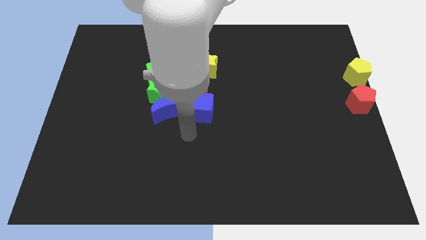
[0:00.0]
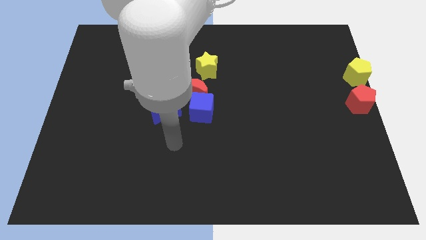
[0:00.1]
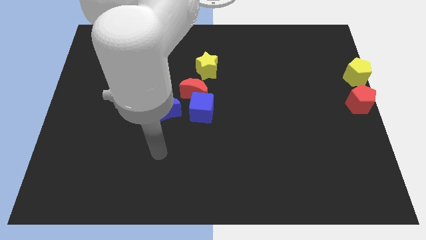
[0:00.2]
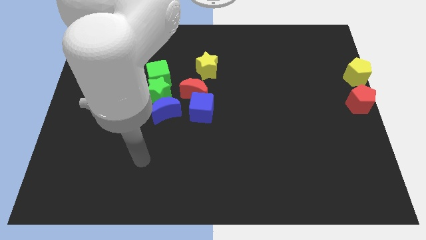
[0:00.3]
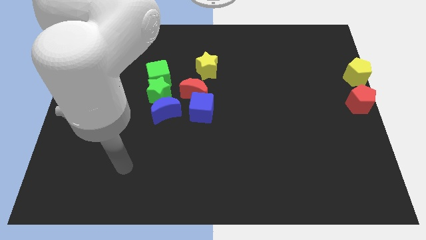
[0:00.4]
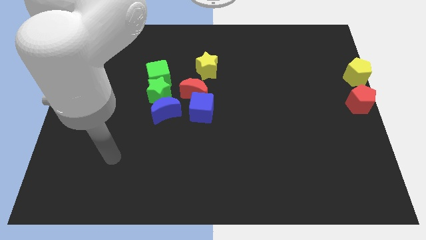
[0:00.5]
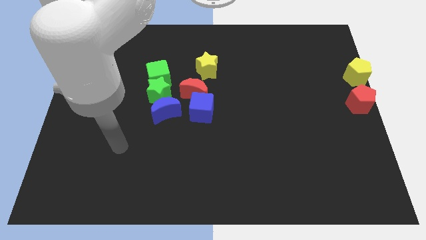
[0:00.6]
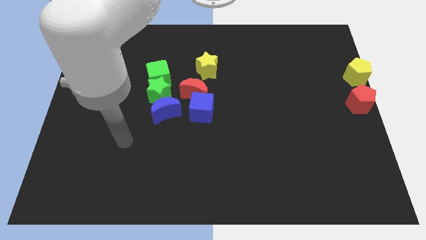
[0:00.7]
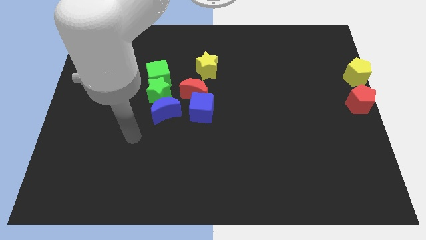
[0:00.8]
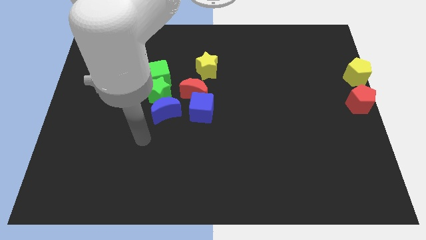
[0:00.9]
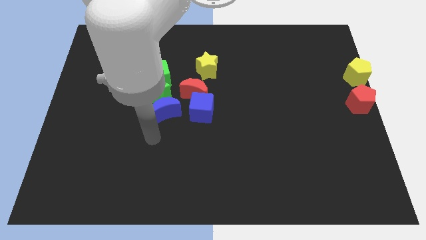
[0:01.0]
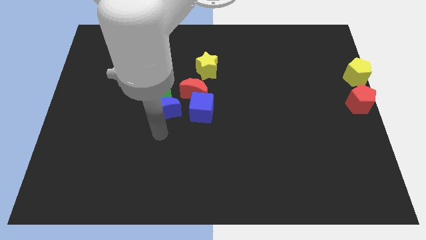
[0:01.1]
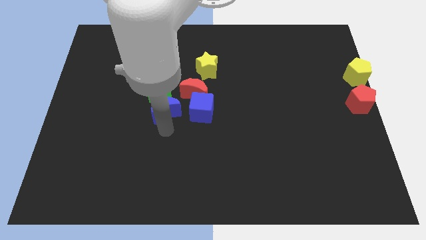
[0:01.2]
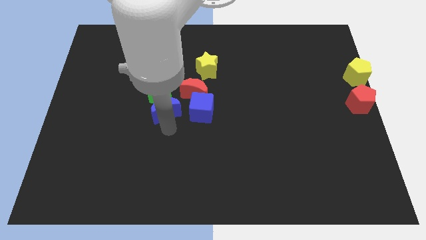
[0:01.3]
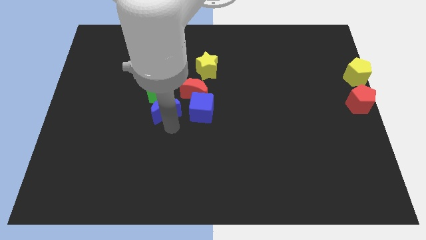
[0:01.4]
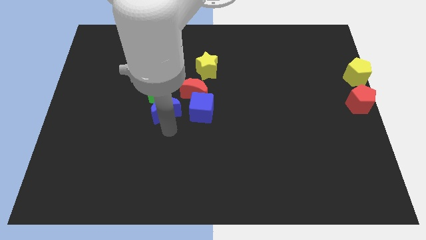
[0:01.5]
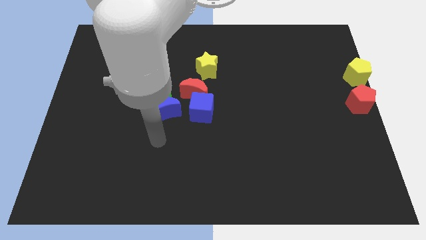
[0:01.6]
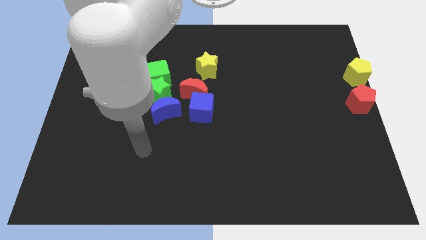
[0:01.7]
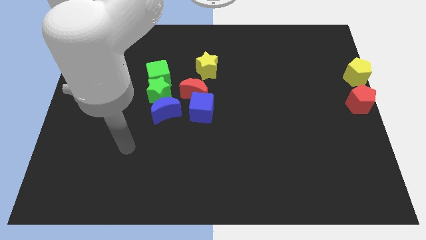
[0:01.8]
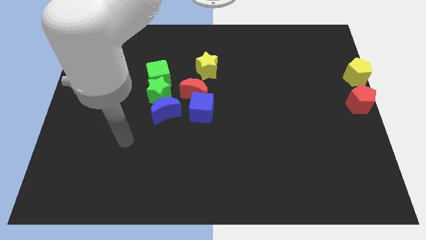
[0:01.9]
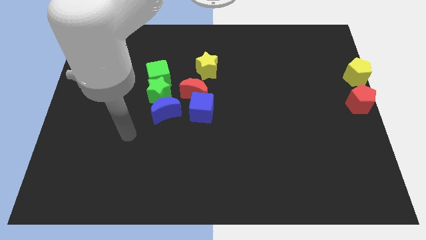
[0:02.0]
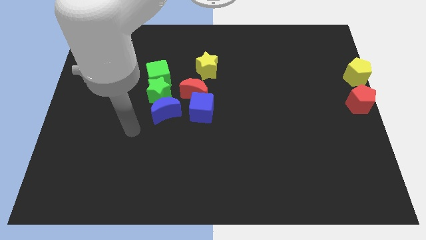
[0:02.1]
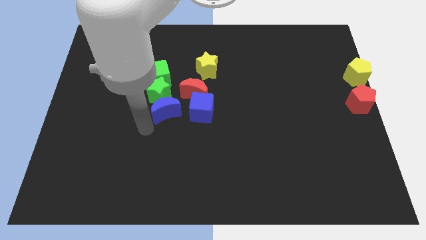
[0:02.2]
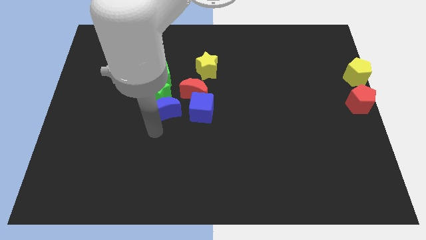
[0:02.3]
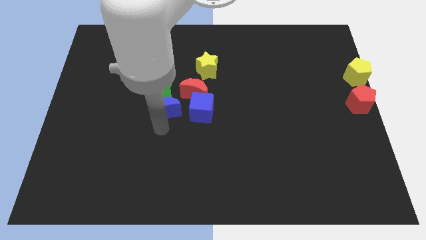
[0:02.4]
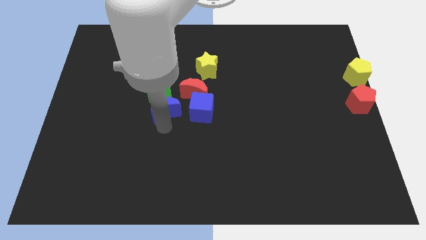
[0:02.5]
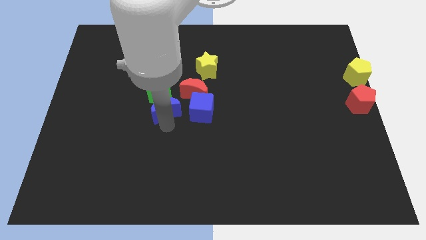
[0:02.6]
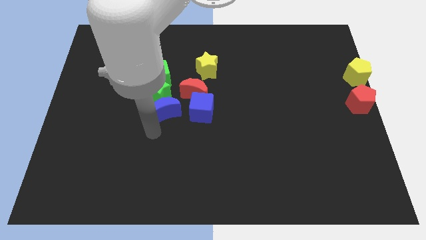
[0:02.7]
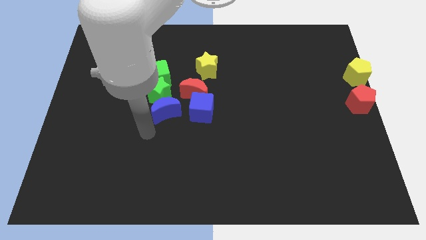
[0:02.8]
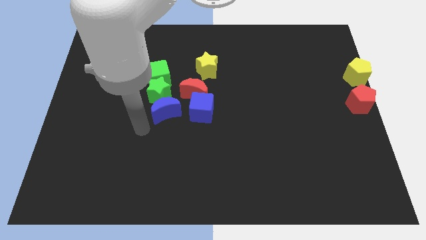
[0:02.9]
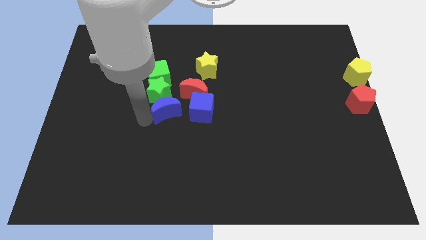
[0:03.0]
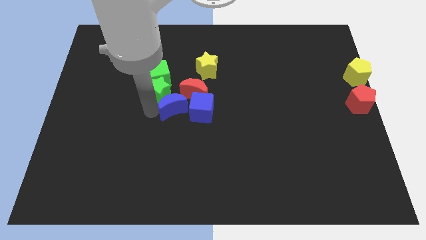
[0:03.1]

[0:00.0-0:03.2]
place your hand at the left side of the blue moon

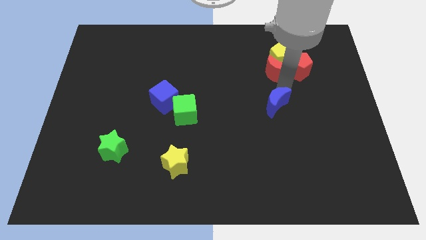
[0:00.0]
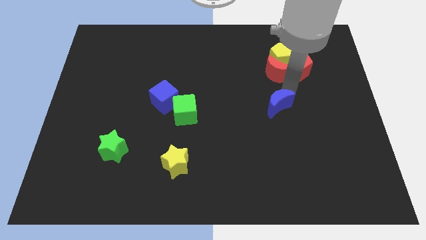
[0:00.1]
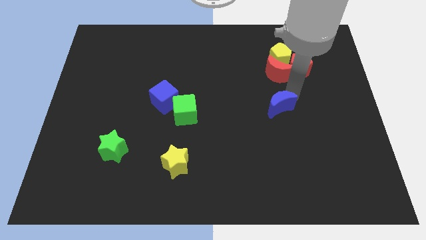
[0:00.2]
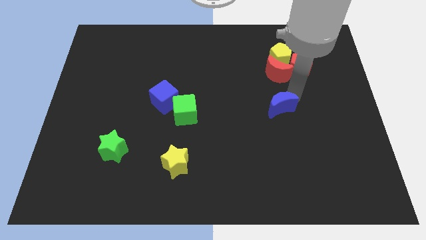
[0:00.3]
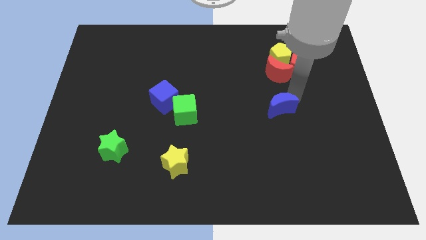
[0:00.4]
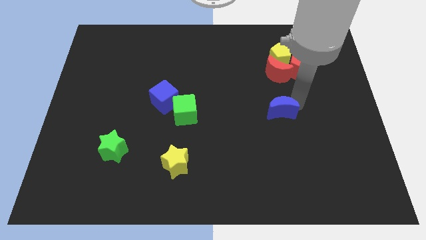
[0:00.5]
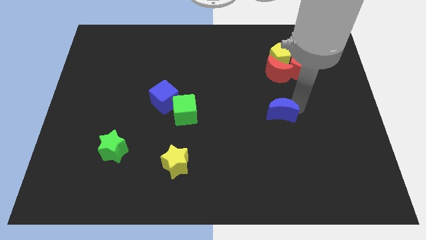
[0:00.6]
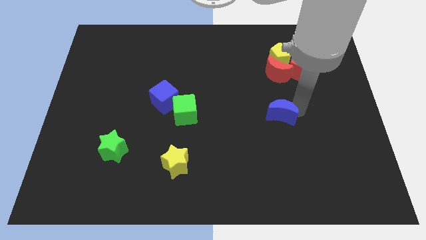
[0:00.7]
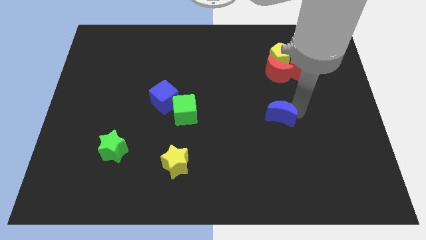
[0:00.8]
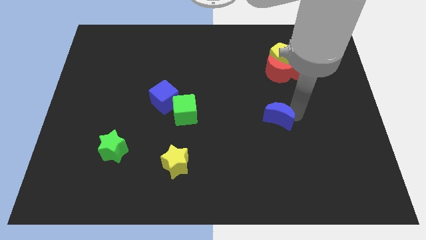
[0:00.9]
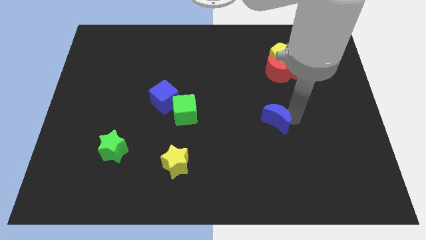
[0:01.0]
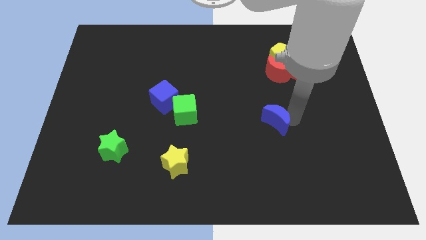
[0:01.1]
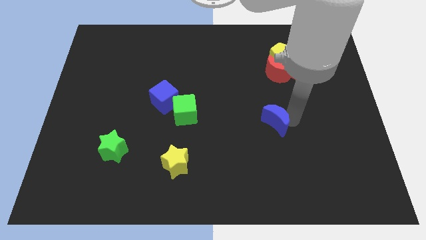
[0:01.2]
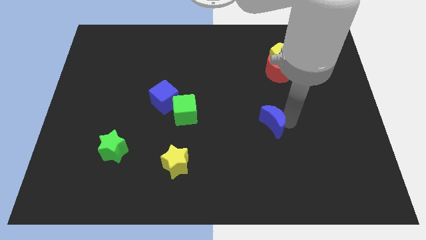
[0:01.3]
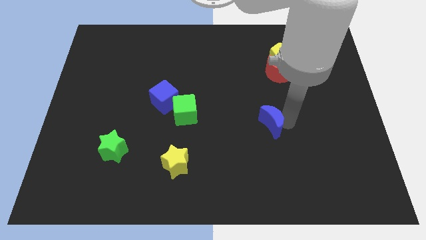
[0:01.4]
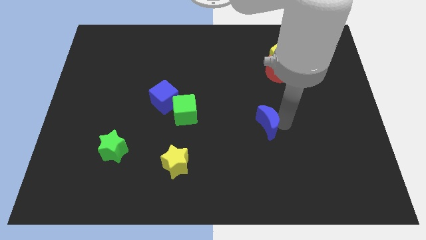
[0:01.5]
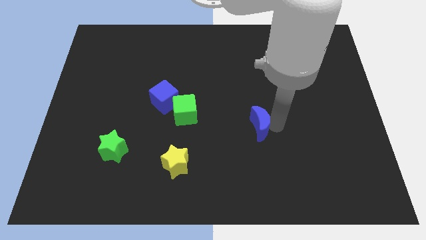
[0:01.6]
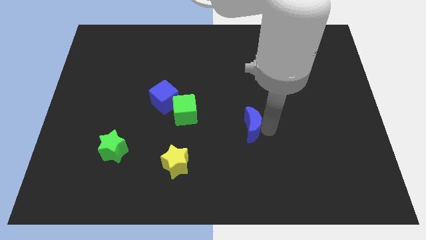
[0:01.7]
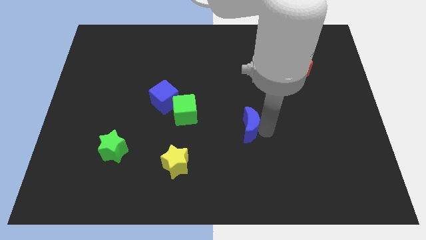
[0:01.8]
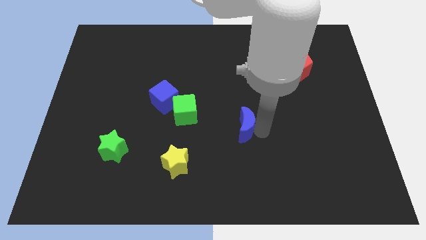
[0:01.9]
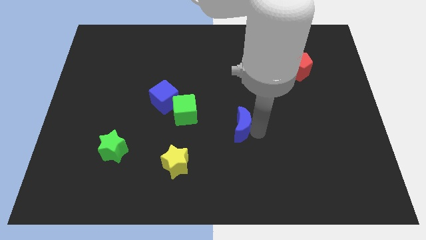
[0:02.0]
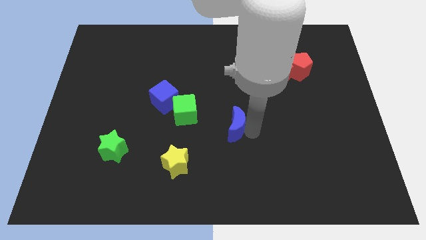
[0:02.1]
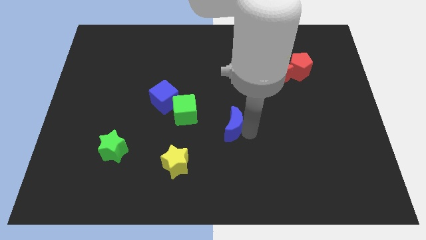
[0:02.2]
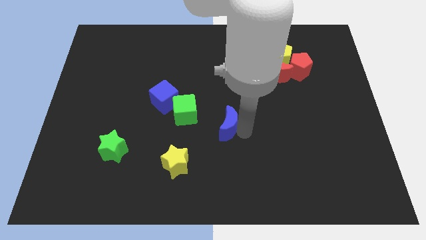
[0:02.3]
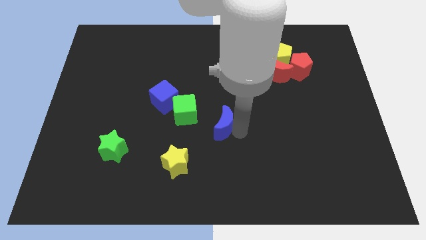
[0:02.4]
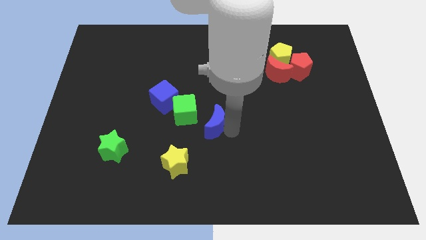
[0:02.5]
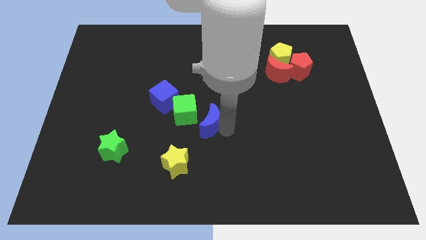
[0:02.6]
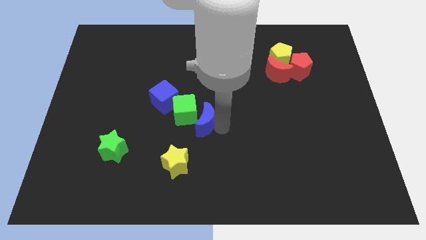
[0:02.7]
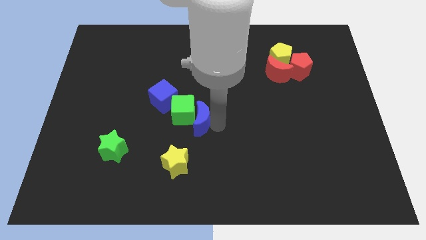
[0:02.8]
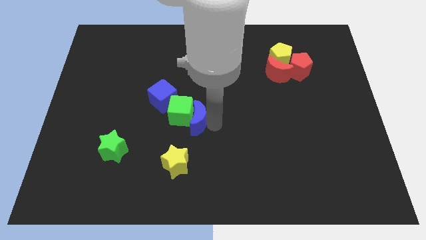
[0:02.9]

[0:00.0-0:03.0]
slide the blue crescent into the green cube

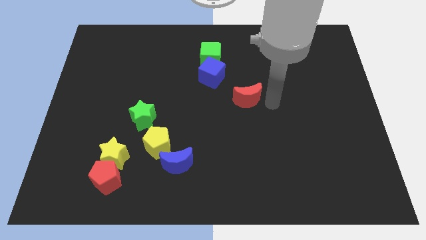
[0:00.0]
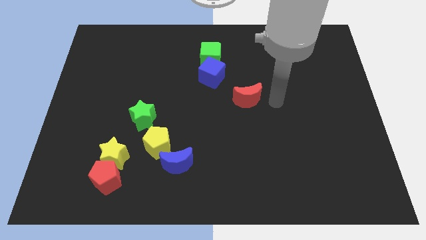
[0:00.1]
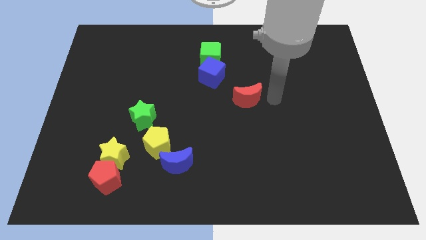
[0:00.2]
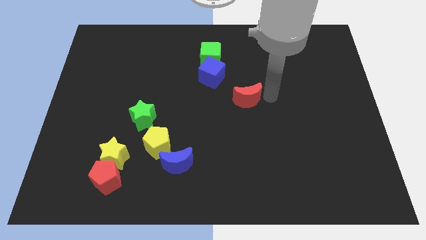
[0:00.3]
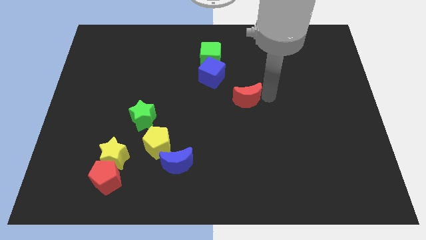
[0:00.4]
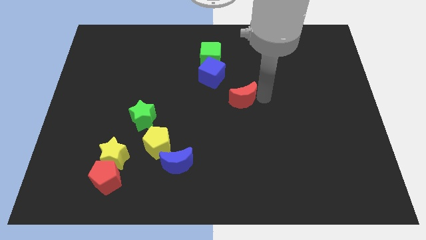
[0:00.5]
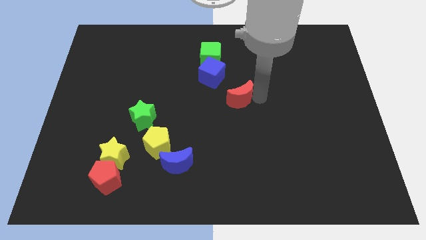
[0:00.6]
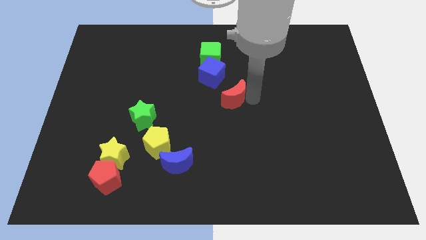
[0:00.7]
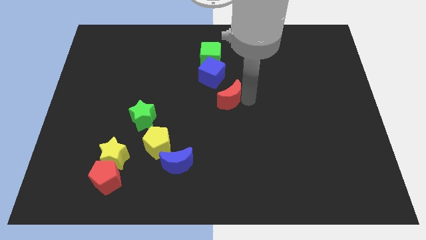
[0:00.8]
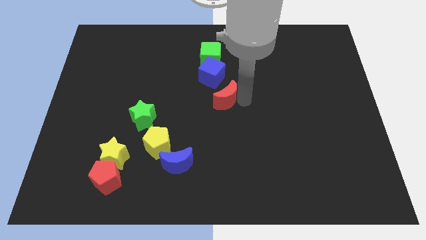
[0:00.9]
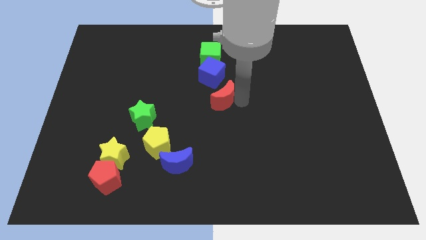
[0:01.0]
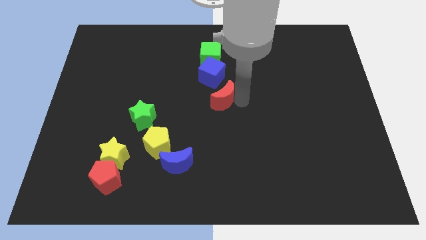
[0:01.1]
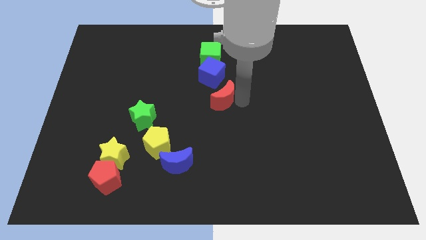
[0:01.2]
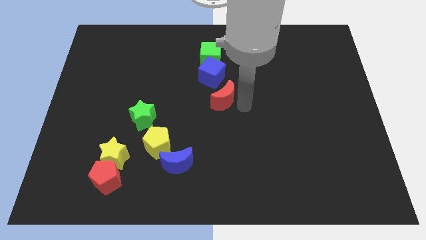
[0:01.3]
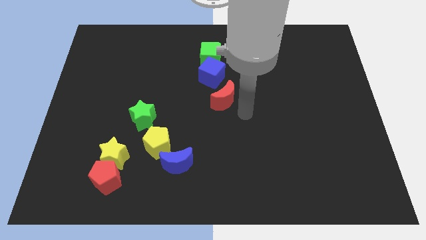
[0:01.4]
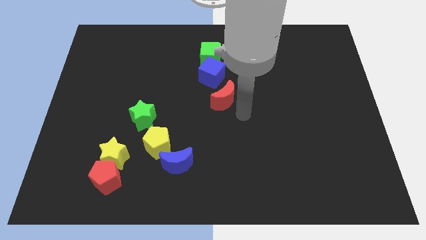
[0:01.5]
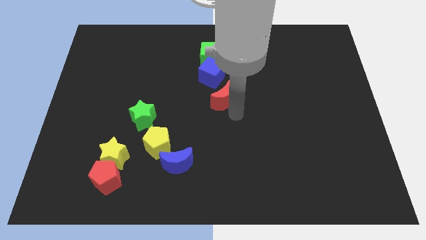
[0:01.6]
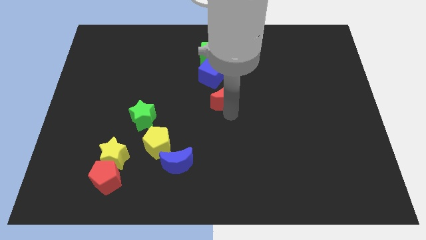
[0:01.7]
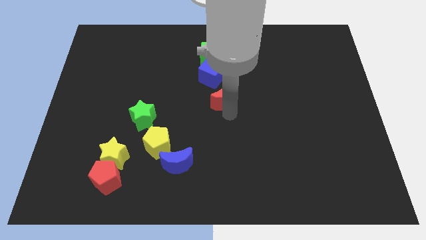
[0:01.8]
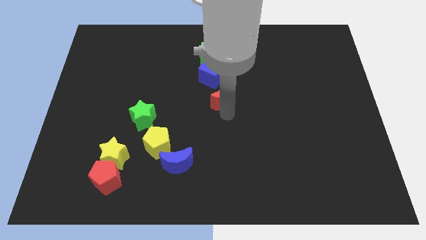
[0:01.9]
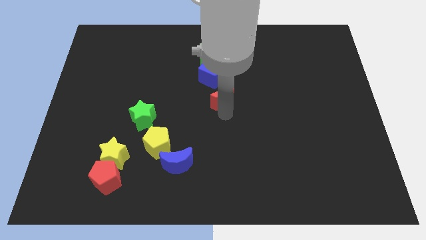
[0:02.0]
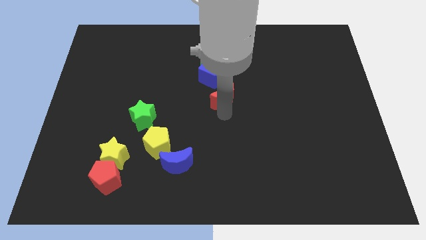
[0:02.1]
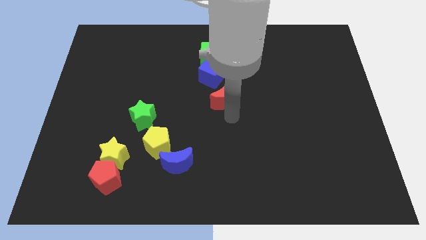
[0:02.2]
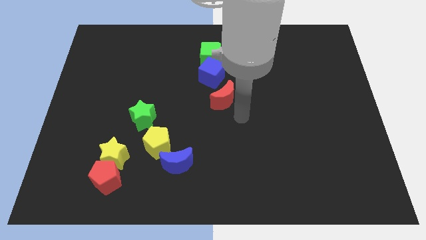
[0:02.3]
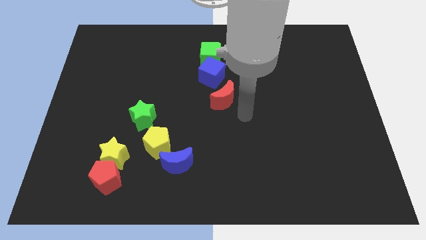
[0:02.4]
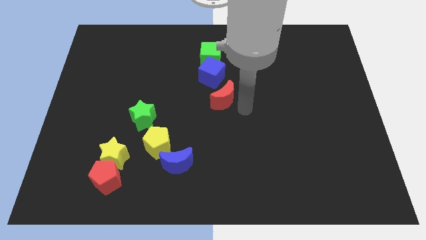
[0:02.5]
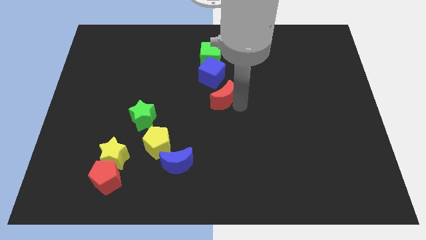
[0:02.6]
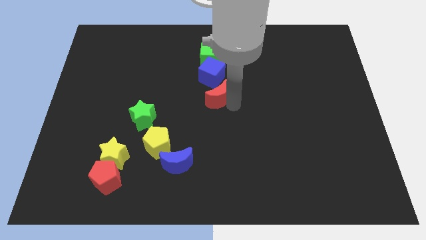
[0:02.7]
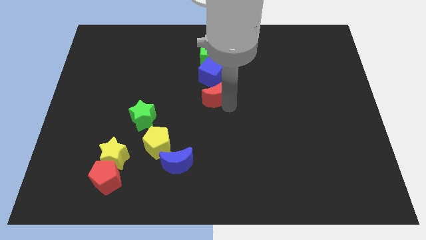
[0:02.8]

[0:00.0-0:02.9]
move the red crescent to the bottom of the blue cube
